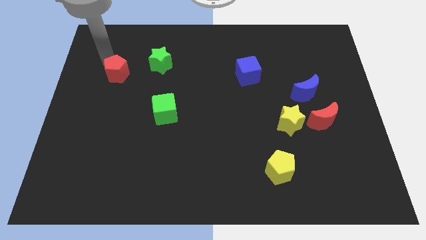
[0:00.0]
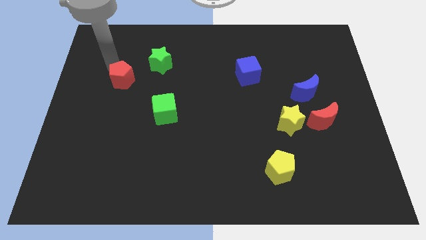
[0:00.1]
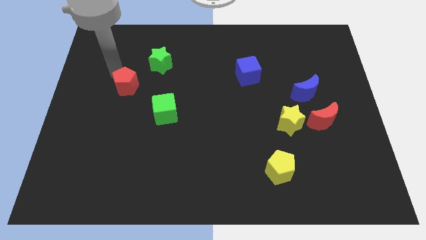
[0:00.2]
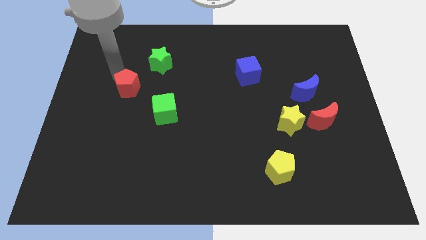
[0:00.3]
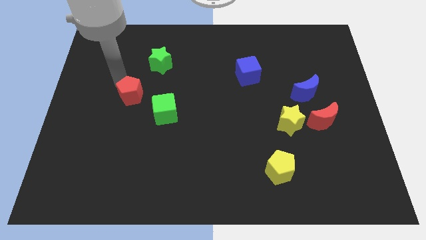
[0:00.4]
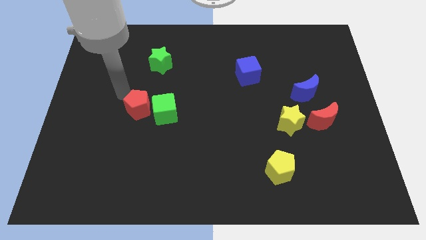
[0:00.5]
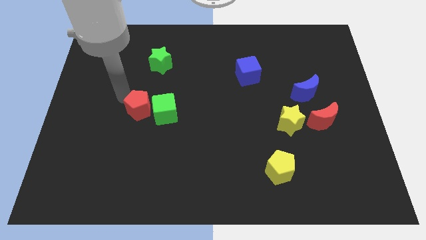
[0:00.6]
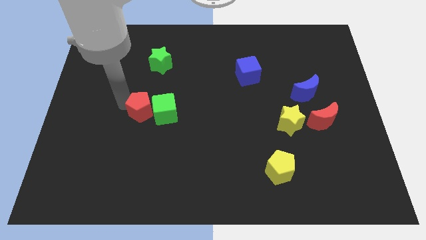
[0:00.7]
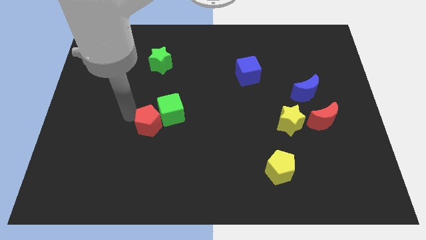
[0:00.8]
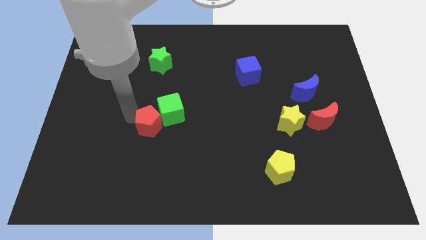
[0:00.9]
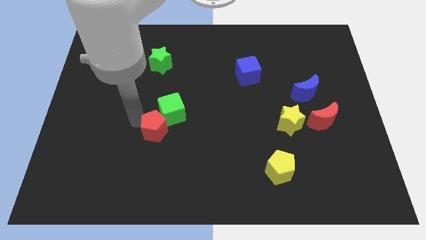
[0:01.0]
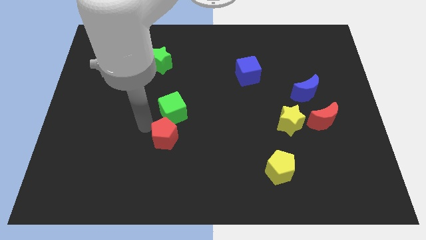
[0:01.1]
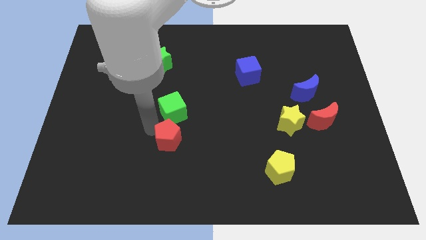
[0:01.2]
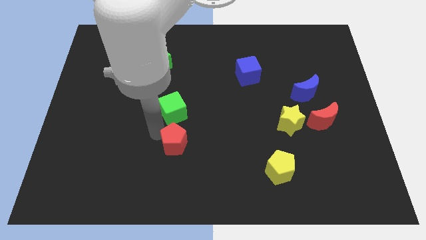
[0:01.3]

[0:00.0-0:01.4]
push red pentagon below green cube

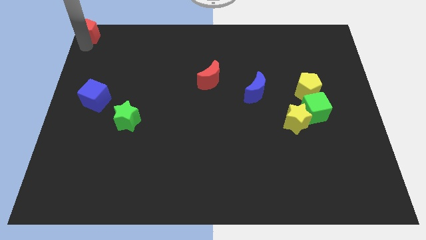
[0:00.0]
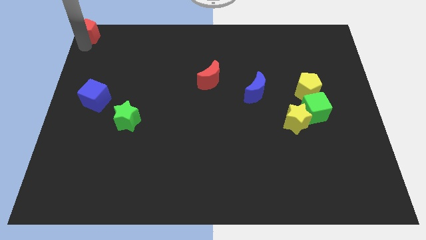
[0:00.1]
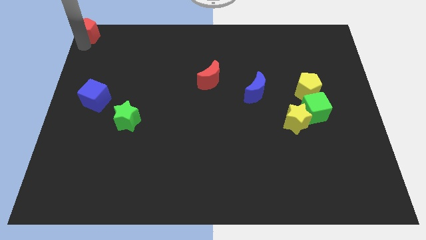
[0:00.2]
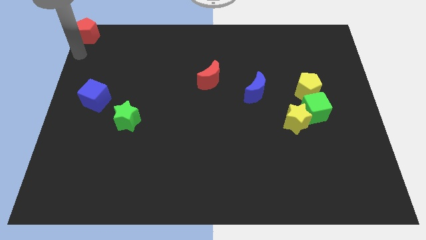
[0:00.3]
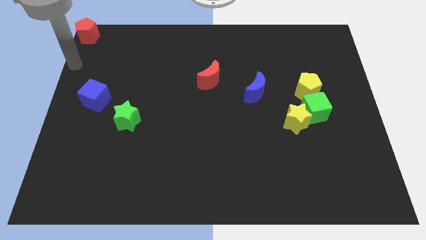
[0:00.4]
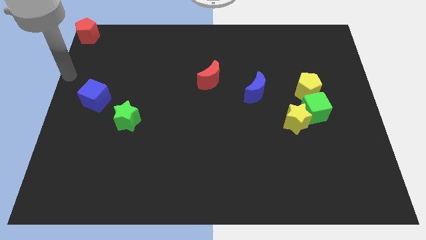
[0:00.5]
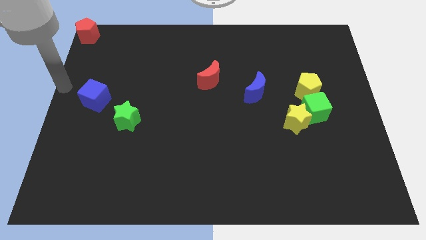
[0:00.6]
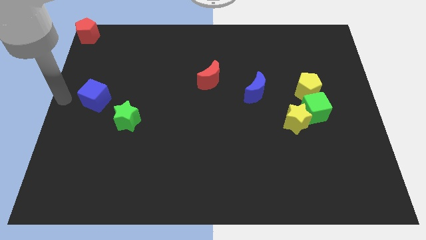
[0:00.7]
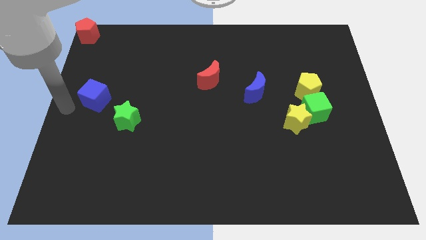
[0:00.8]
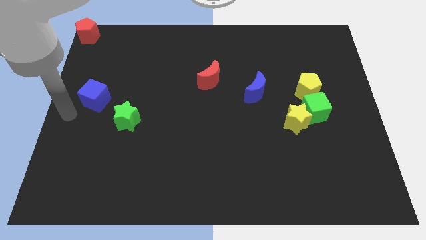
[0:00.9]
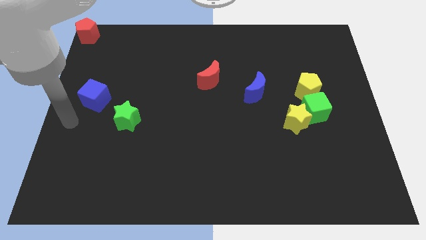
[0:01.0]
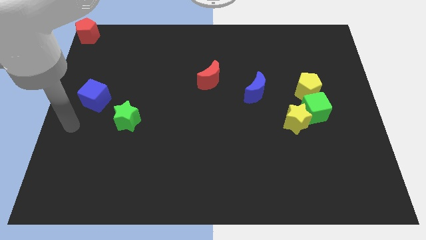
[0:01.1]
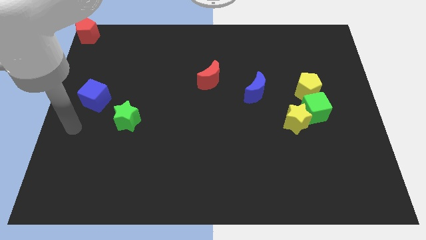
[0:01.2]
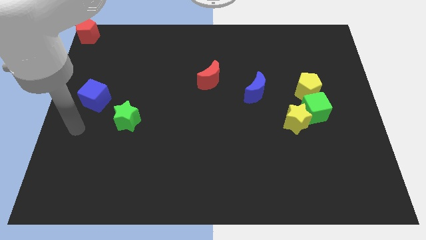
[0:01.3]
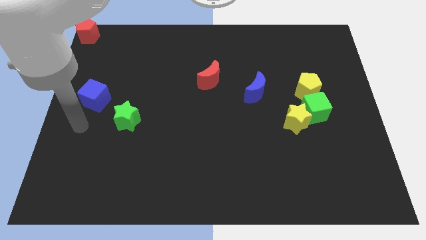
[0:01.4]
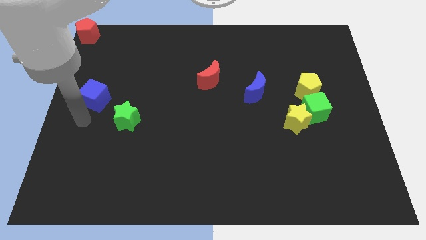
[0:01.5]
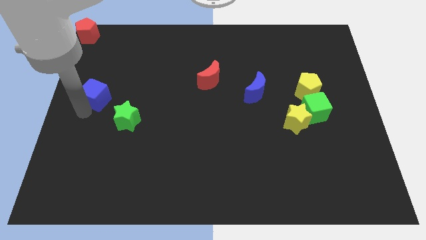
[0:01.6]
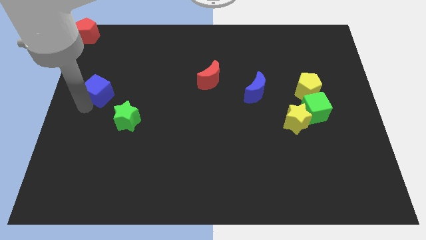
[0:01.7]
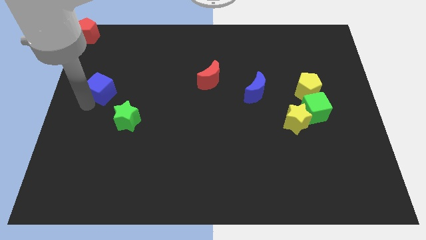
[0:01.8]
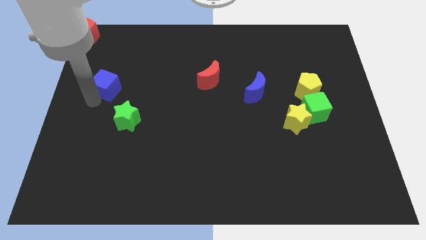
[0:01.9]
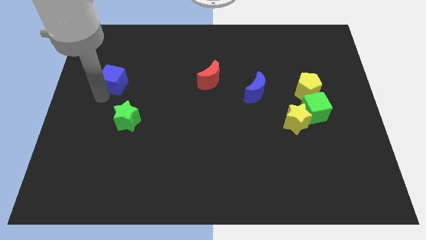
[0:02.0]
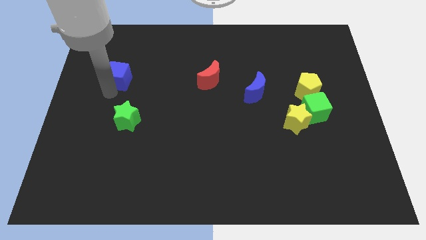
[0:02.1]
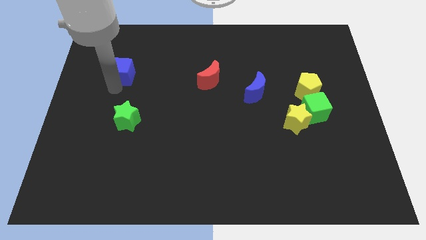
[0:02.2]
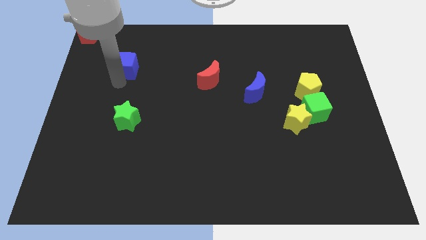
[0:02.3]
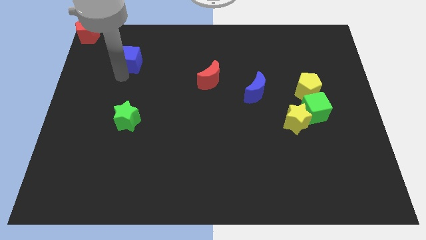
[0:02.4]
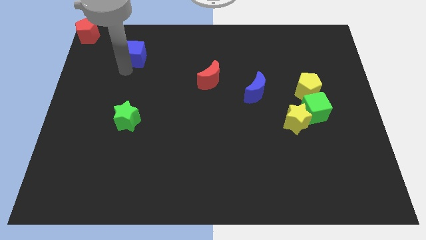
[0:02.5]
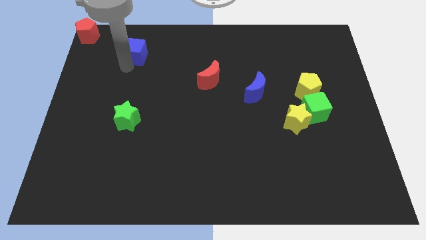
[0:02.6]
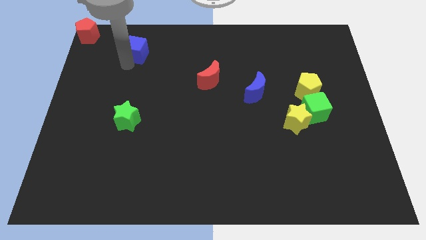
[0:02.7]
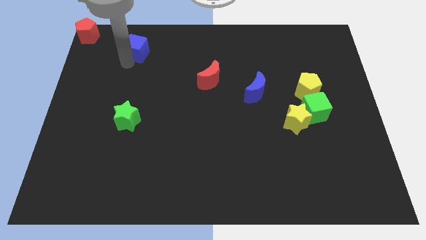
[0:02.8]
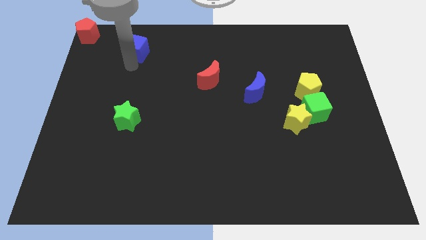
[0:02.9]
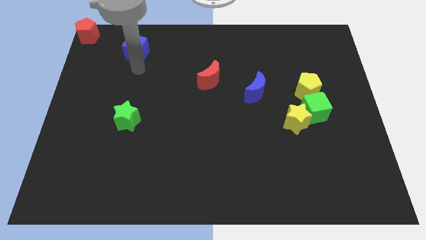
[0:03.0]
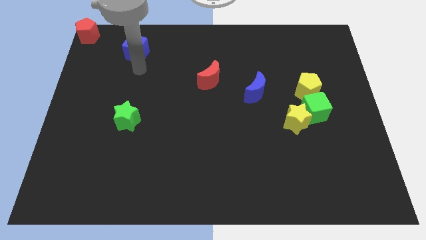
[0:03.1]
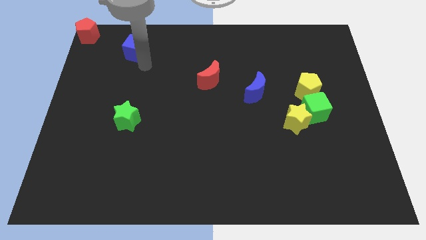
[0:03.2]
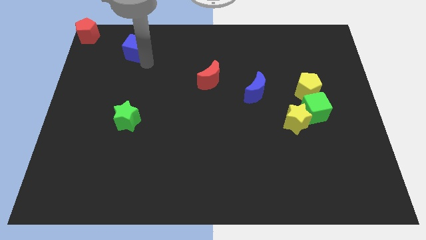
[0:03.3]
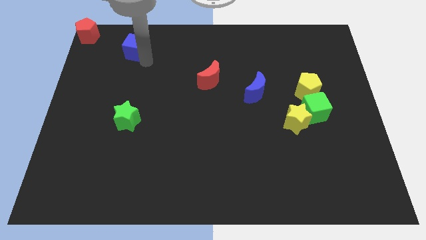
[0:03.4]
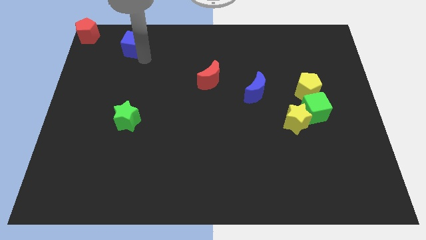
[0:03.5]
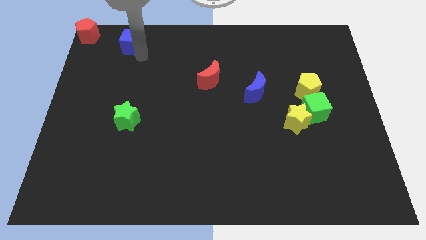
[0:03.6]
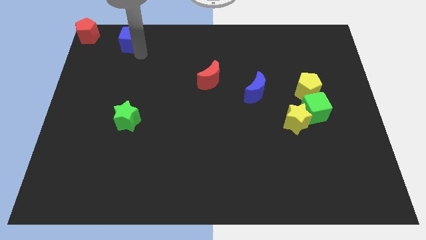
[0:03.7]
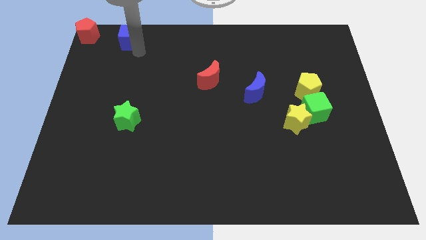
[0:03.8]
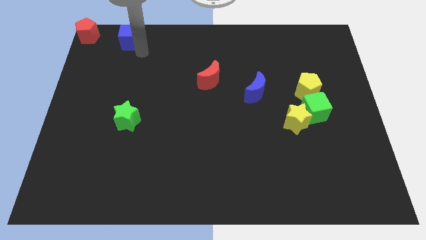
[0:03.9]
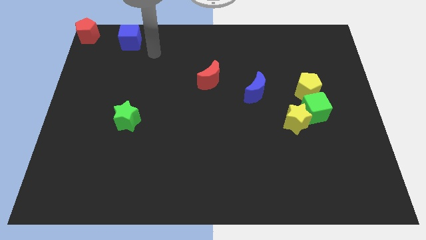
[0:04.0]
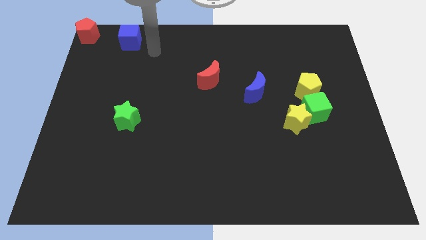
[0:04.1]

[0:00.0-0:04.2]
place blue cube parallel to the red pentagon

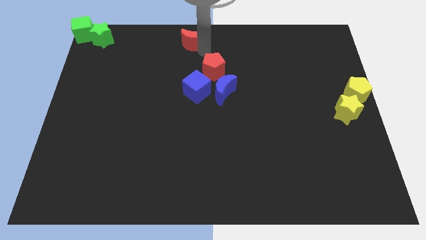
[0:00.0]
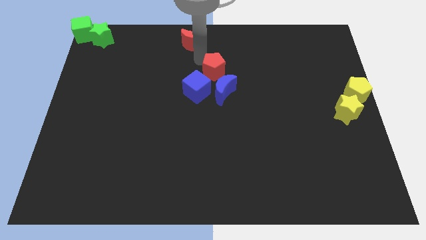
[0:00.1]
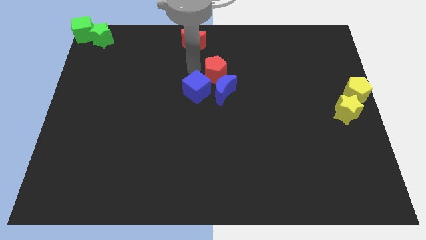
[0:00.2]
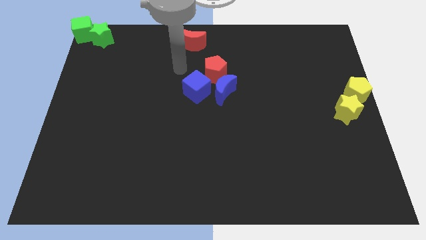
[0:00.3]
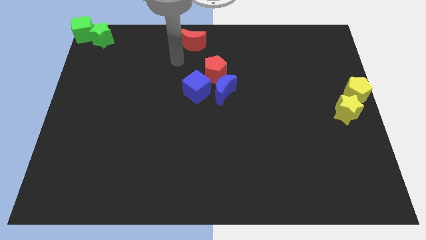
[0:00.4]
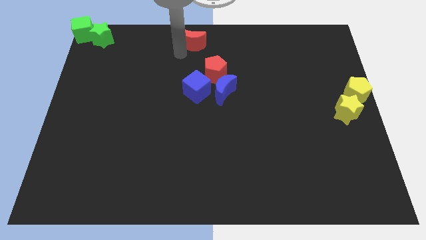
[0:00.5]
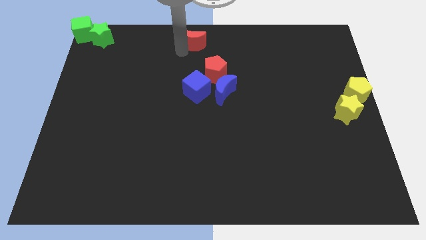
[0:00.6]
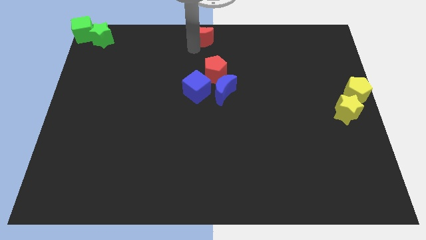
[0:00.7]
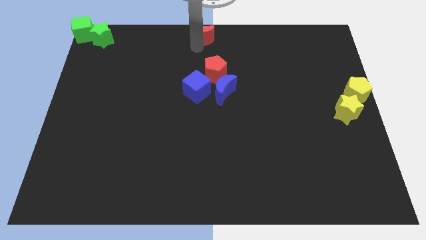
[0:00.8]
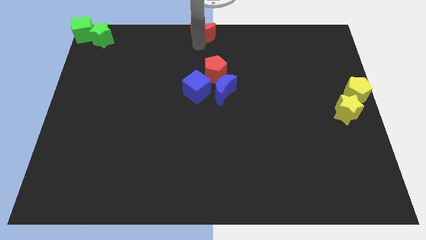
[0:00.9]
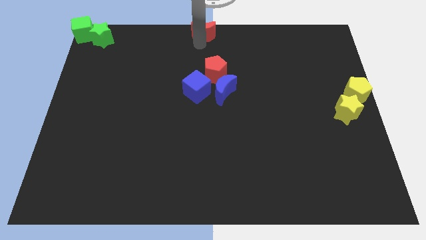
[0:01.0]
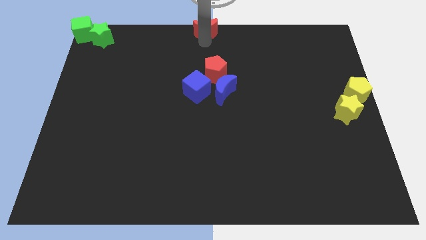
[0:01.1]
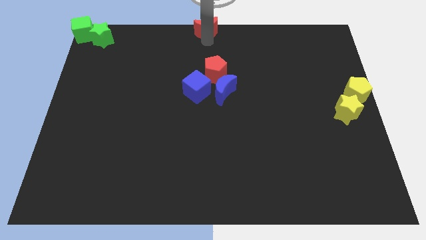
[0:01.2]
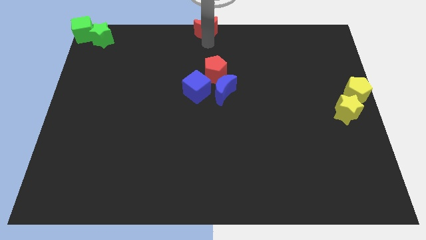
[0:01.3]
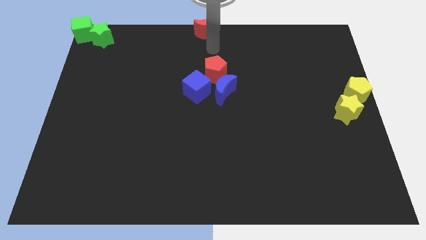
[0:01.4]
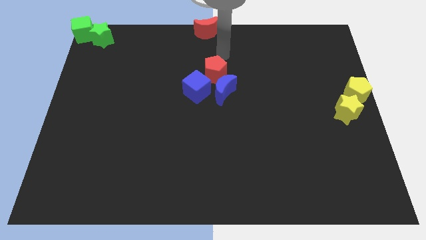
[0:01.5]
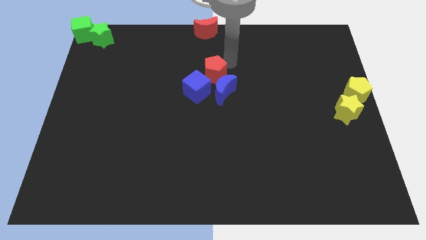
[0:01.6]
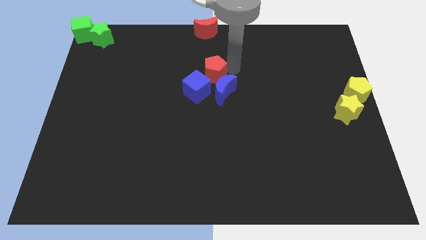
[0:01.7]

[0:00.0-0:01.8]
place the red moon to top center of the board

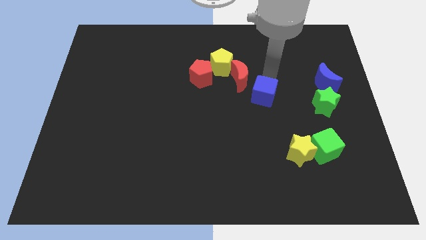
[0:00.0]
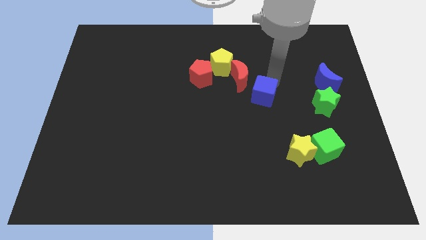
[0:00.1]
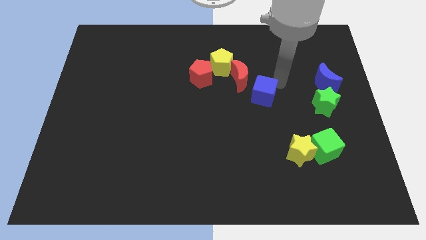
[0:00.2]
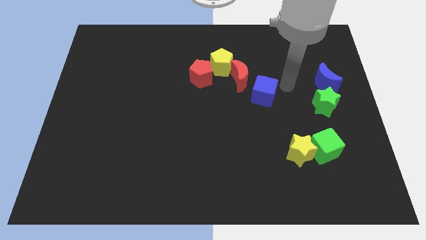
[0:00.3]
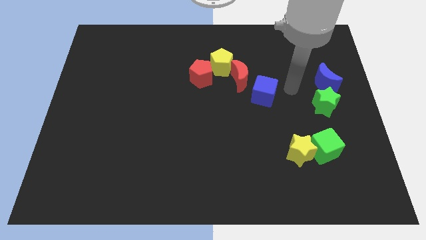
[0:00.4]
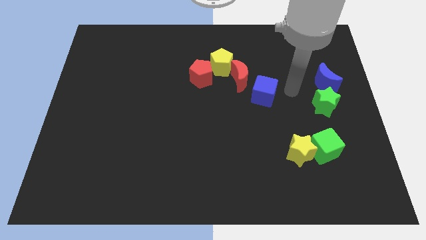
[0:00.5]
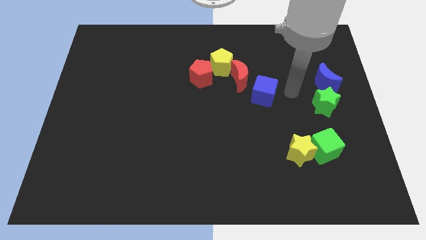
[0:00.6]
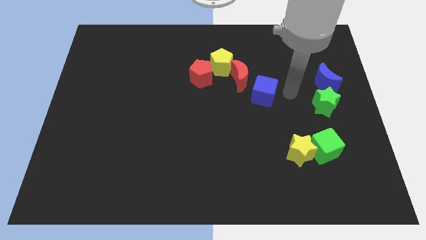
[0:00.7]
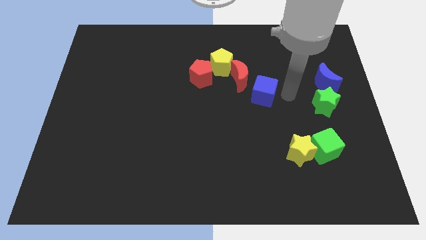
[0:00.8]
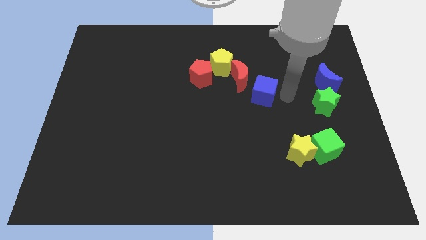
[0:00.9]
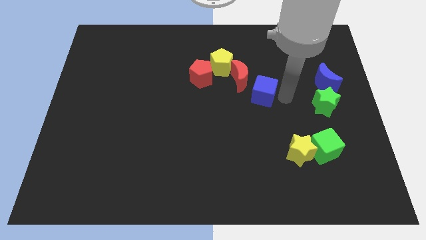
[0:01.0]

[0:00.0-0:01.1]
point your arm to the right side of blue cube

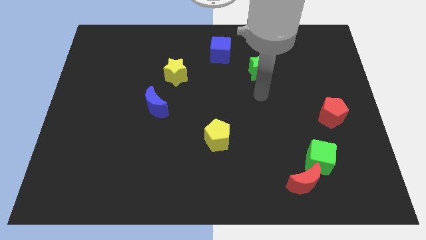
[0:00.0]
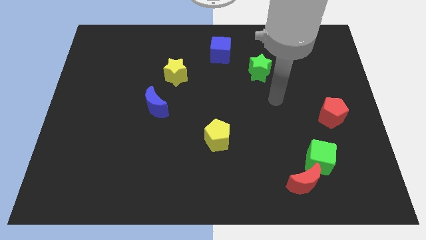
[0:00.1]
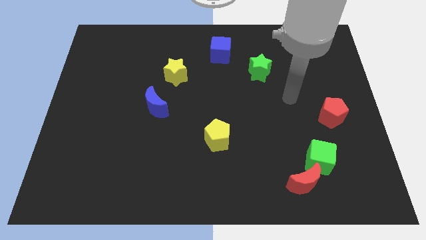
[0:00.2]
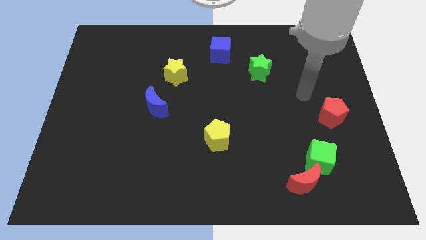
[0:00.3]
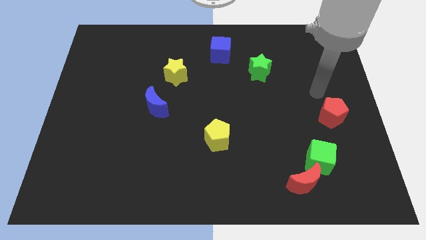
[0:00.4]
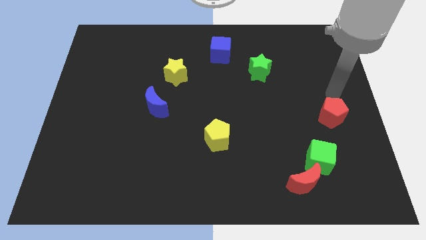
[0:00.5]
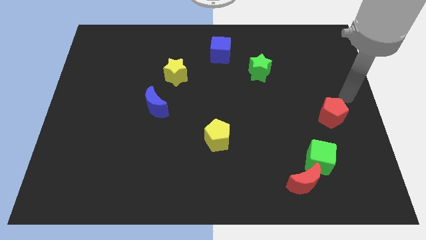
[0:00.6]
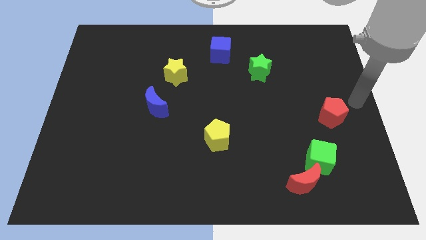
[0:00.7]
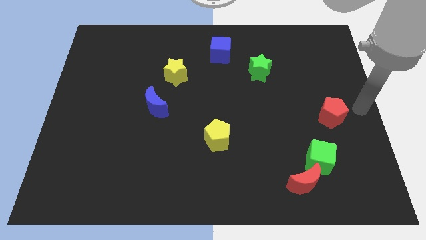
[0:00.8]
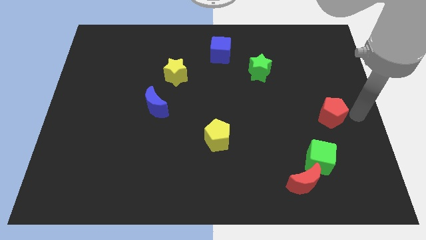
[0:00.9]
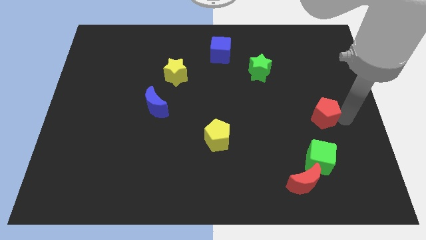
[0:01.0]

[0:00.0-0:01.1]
place your arm to the right of red pentagon
